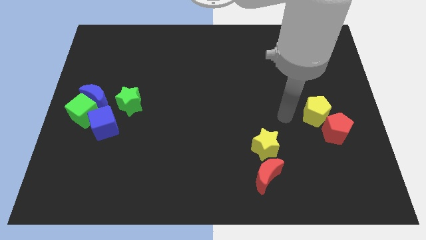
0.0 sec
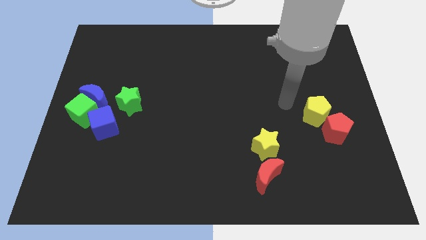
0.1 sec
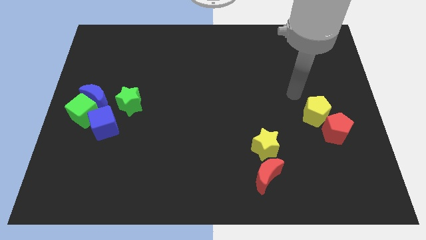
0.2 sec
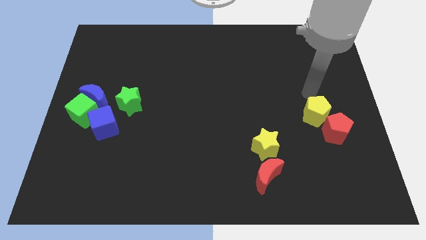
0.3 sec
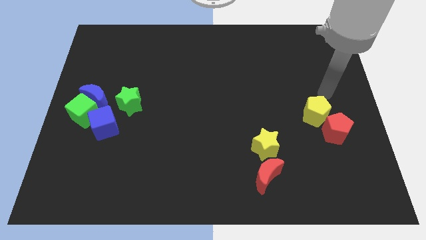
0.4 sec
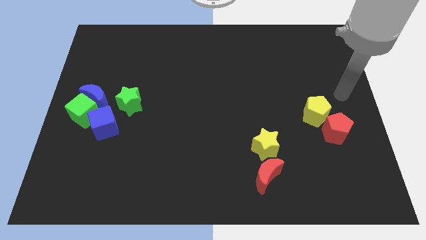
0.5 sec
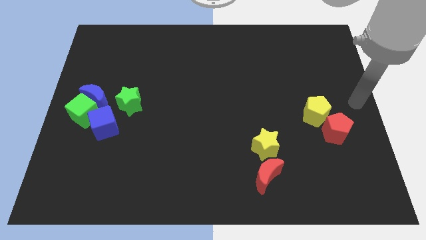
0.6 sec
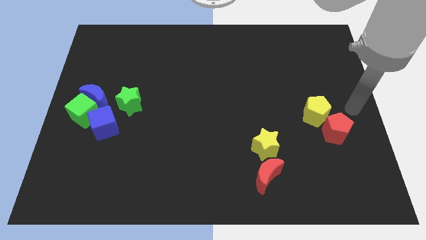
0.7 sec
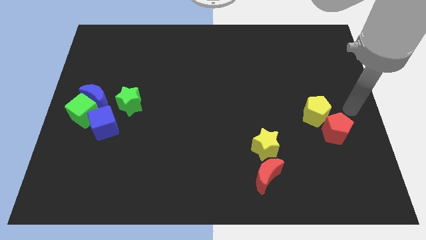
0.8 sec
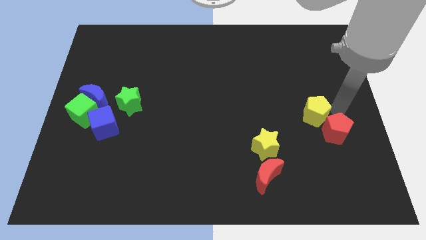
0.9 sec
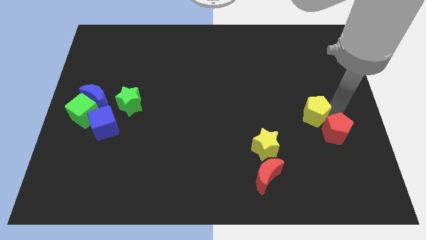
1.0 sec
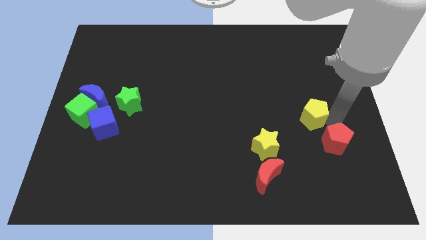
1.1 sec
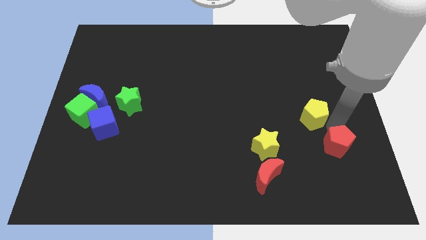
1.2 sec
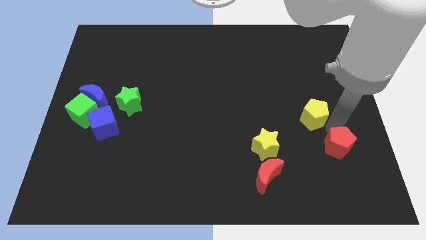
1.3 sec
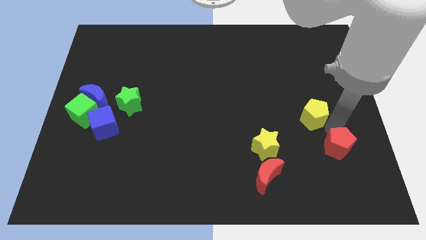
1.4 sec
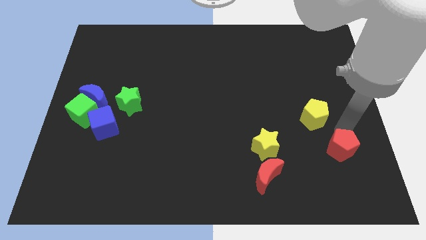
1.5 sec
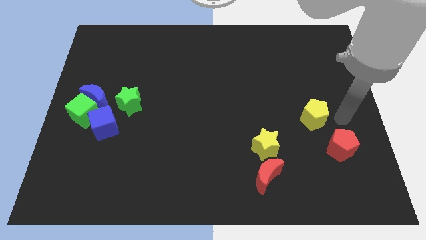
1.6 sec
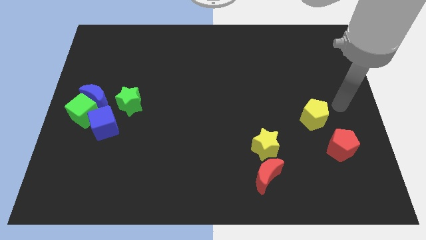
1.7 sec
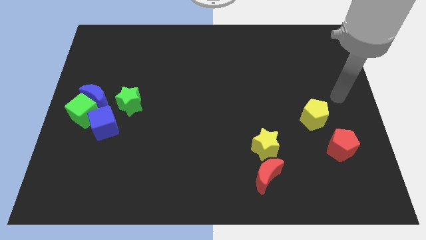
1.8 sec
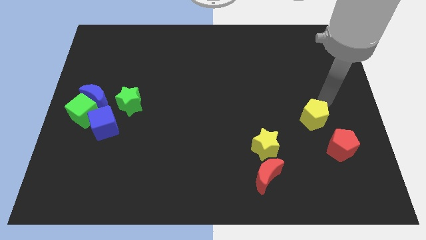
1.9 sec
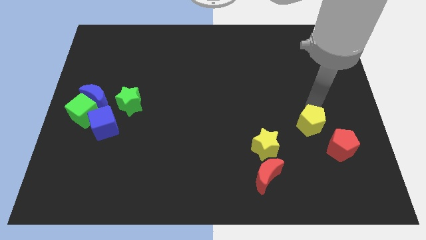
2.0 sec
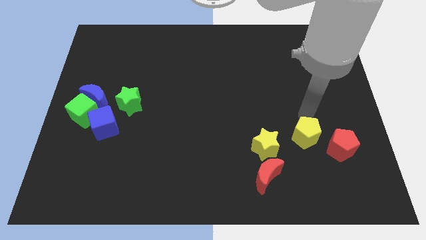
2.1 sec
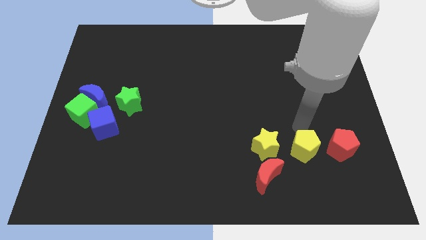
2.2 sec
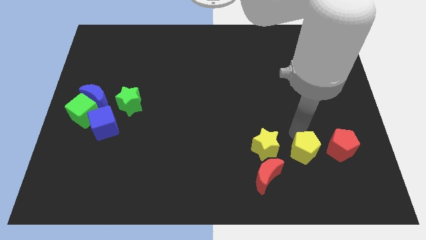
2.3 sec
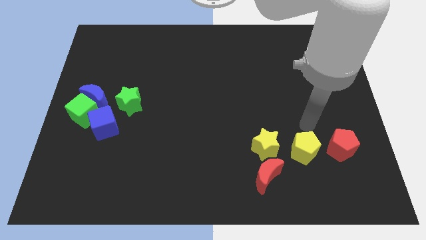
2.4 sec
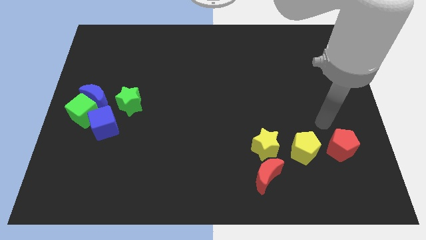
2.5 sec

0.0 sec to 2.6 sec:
place the yellow pentagon right to the yellow star

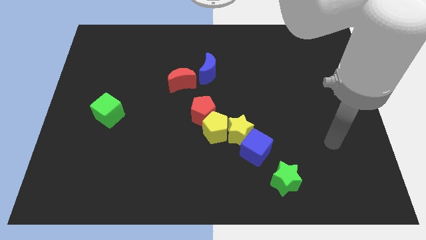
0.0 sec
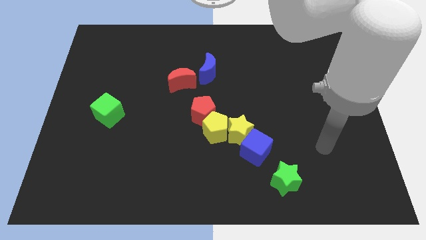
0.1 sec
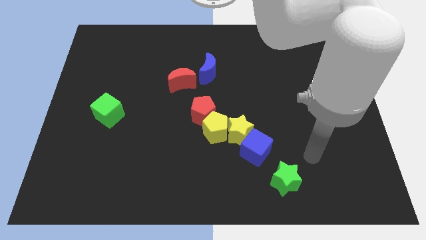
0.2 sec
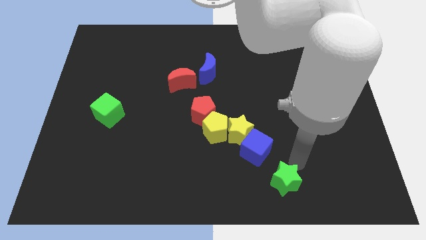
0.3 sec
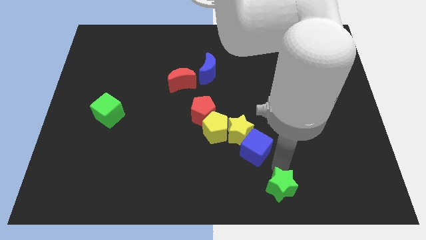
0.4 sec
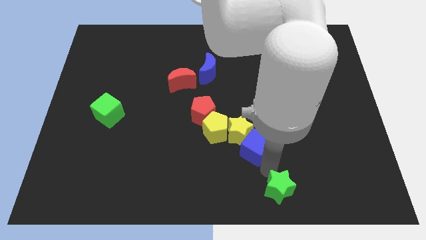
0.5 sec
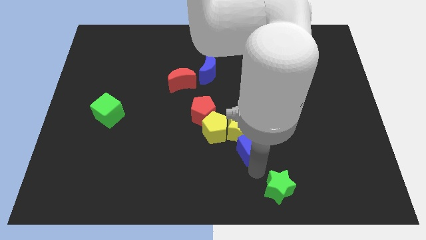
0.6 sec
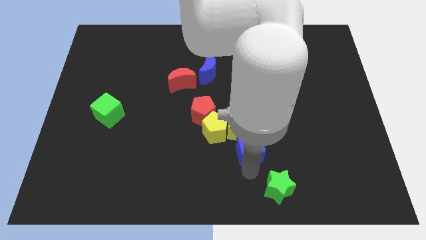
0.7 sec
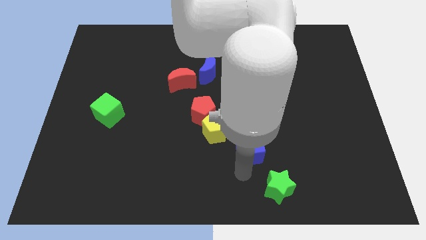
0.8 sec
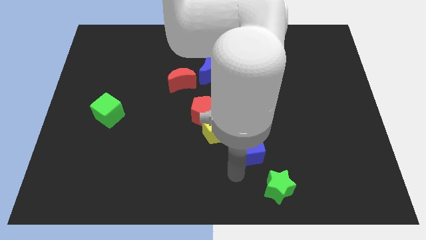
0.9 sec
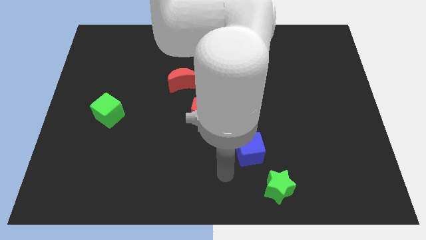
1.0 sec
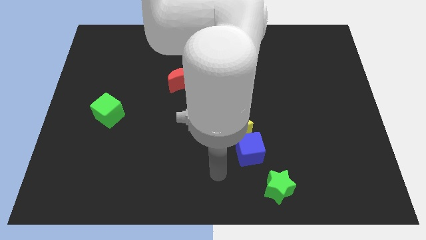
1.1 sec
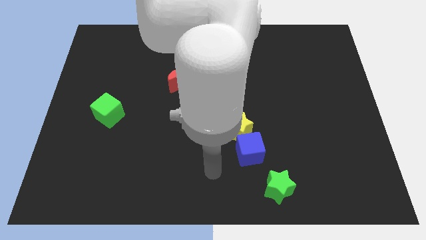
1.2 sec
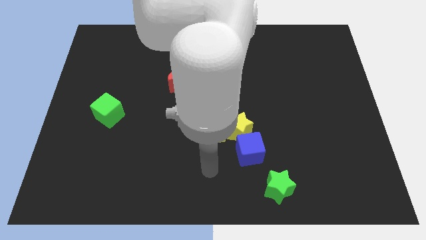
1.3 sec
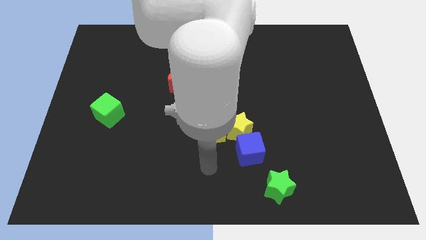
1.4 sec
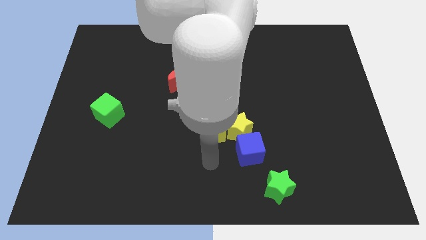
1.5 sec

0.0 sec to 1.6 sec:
touch green star slightly towards bottom center of the board

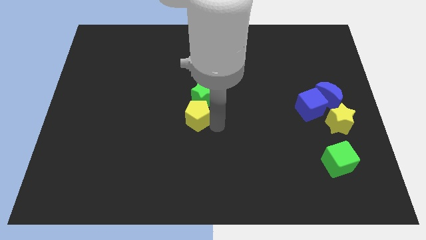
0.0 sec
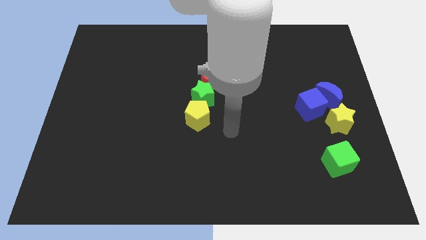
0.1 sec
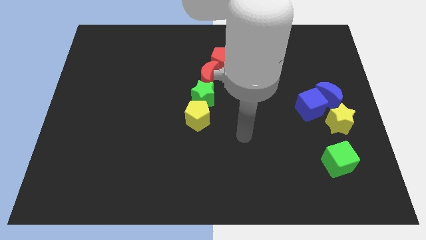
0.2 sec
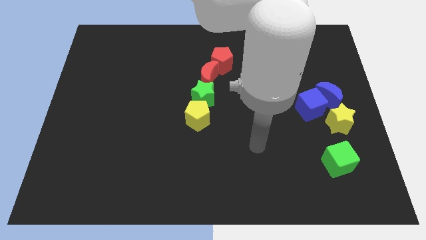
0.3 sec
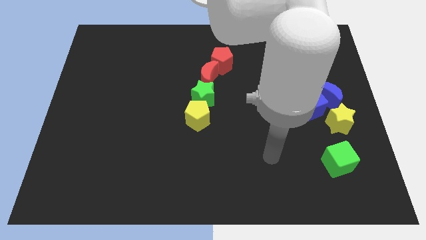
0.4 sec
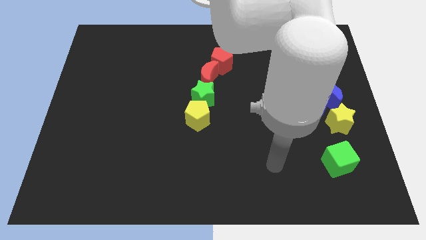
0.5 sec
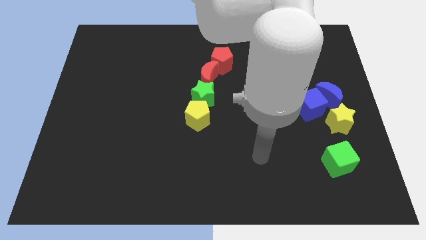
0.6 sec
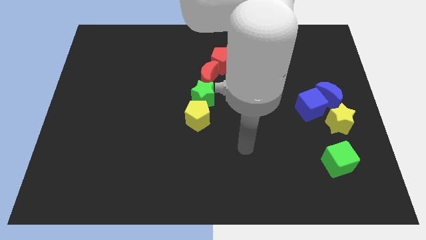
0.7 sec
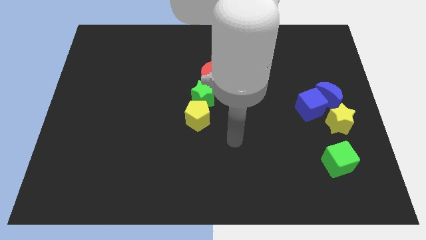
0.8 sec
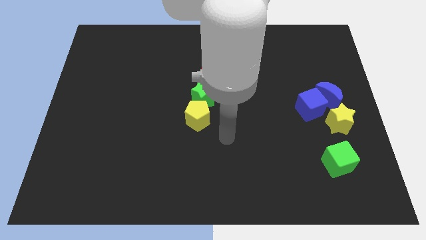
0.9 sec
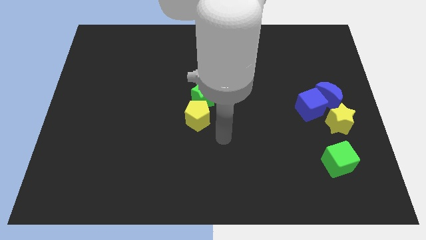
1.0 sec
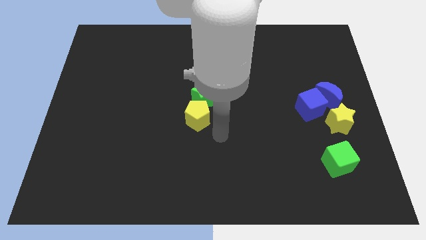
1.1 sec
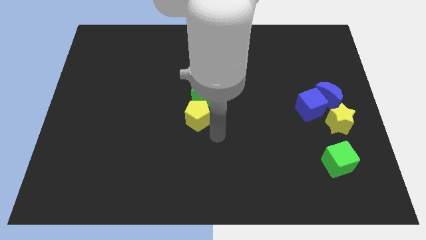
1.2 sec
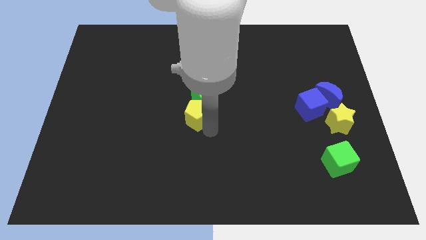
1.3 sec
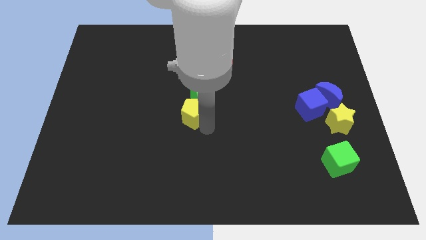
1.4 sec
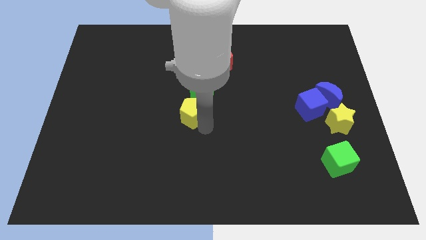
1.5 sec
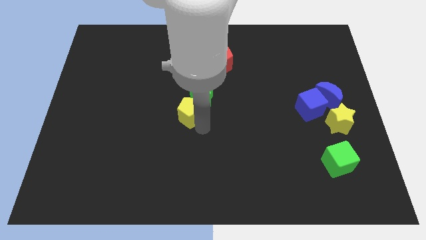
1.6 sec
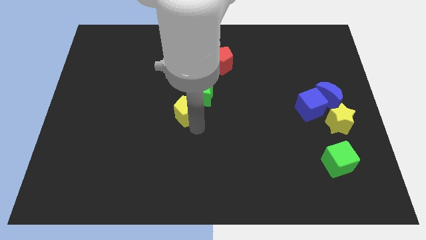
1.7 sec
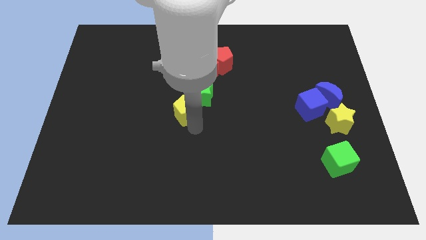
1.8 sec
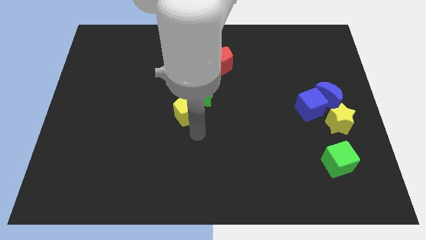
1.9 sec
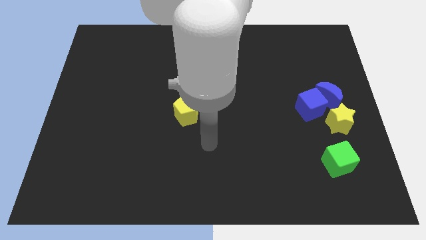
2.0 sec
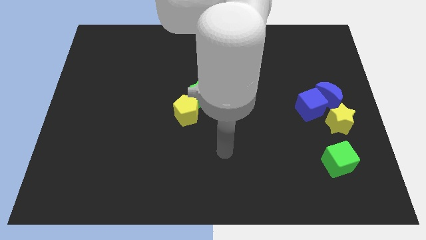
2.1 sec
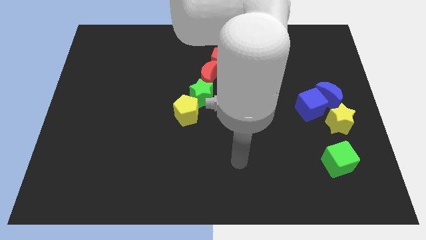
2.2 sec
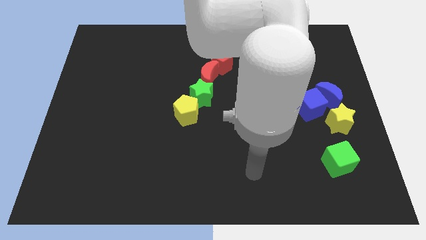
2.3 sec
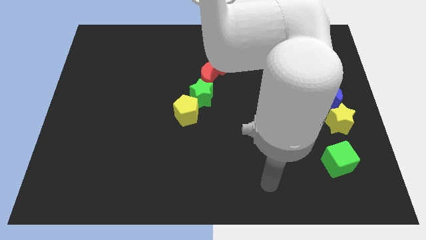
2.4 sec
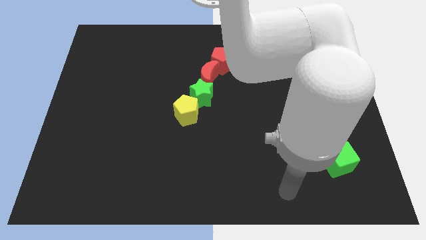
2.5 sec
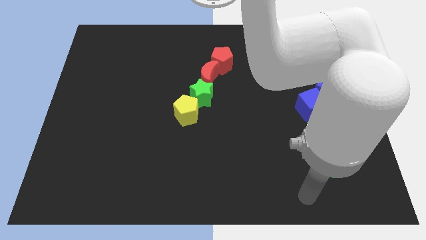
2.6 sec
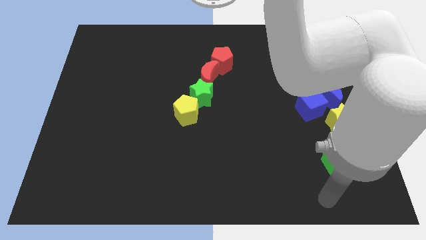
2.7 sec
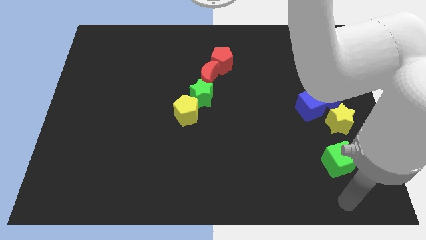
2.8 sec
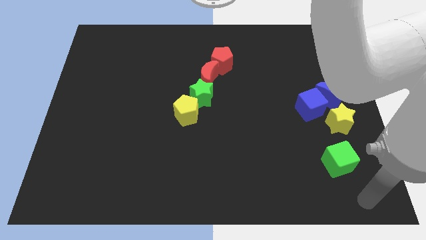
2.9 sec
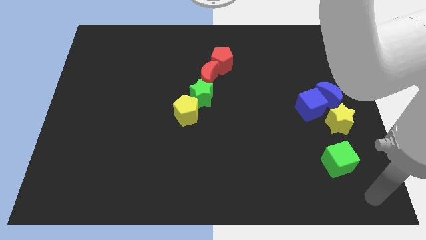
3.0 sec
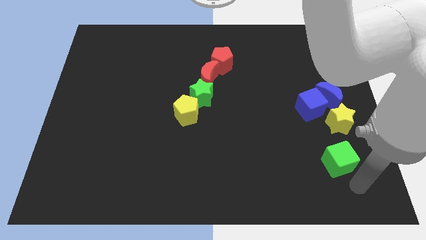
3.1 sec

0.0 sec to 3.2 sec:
move the arm towards the bottom right

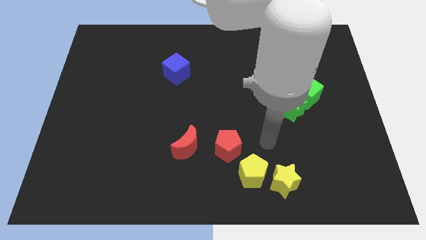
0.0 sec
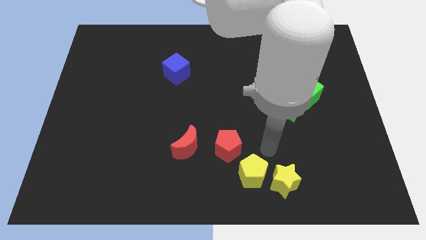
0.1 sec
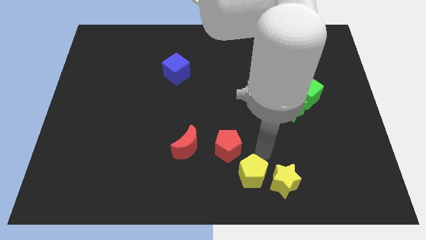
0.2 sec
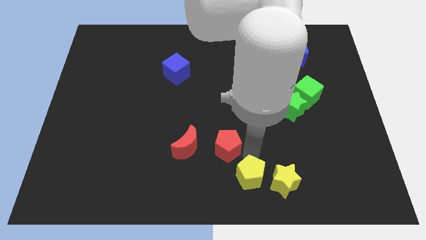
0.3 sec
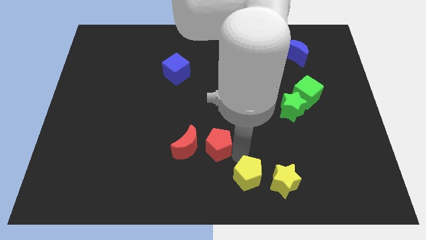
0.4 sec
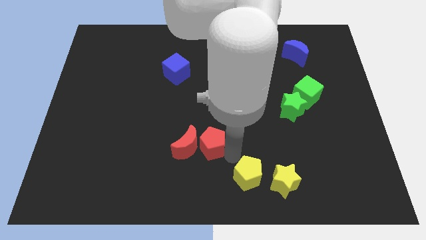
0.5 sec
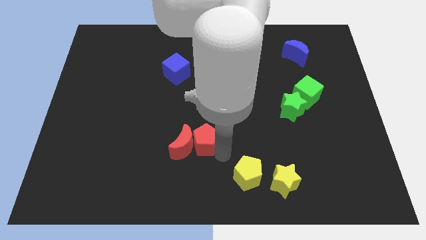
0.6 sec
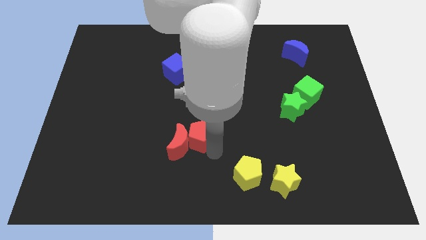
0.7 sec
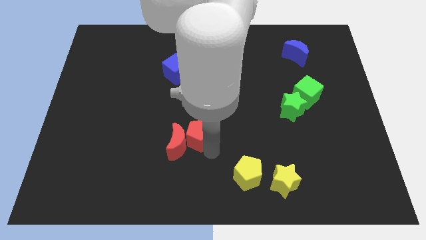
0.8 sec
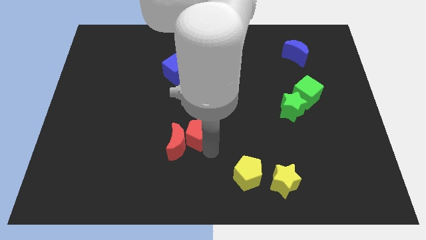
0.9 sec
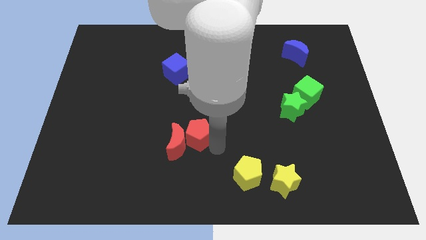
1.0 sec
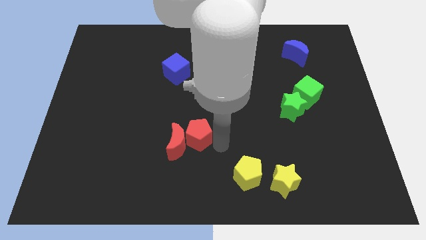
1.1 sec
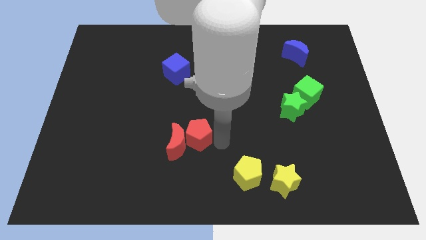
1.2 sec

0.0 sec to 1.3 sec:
push the red pentagon into the red moon

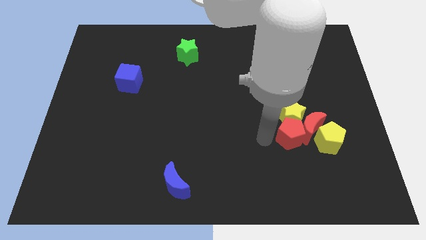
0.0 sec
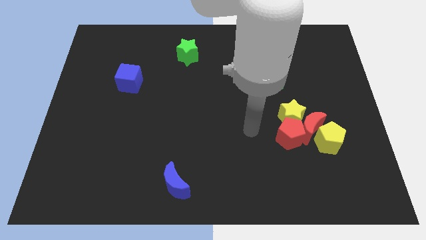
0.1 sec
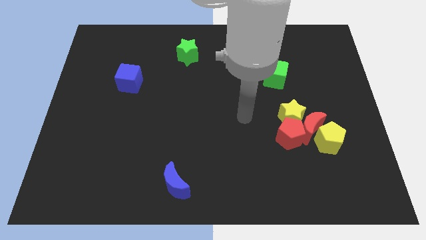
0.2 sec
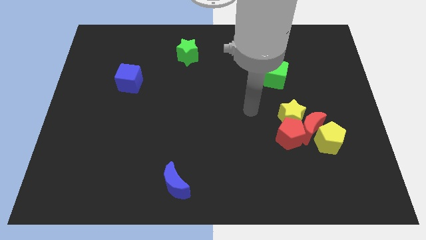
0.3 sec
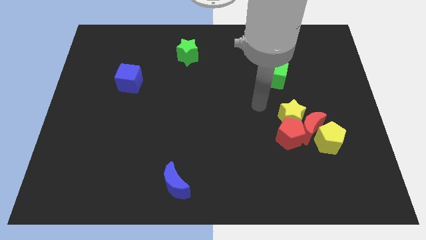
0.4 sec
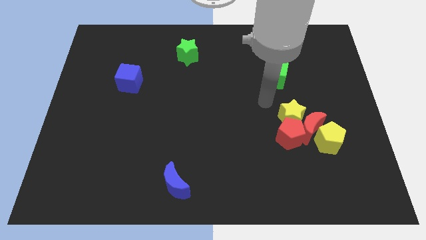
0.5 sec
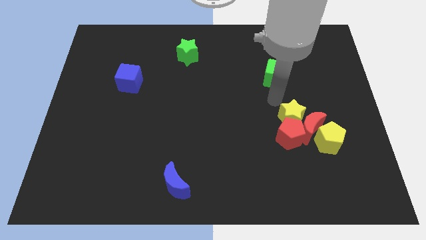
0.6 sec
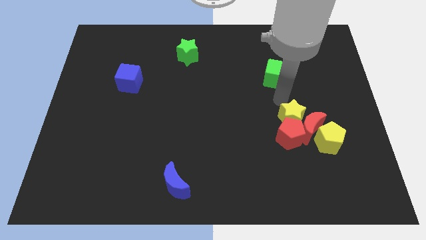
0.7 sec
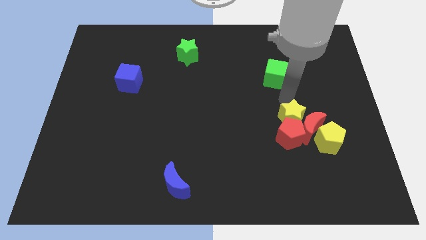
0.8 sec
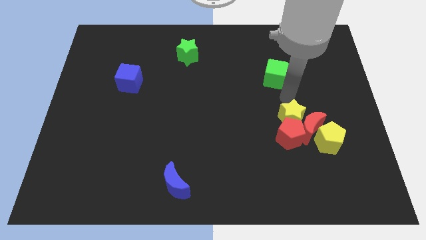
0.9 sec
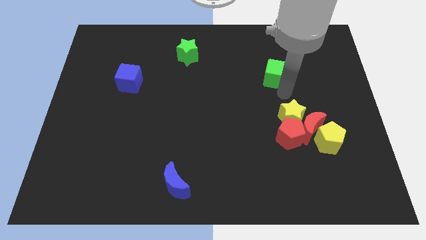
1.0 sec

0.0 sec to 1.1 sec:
move your arm to the bottom of the green cube
